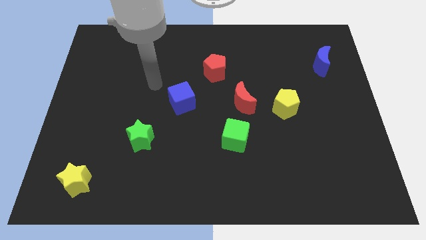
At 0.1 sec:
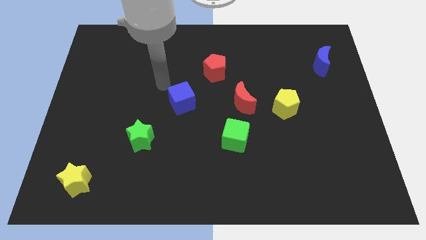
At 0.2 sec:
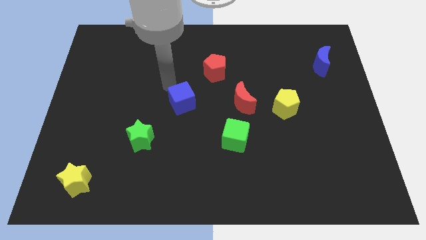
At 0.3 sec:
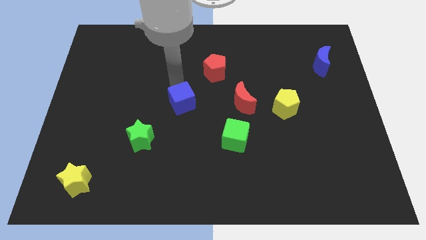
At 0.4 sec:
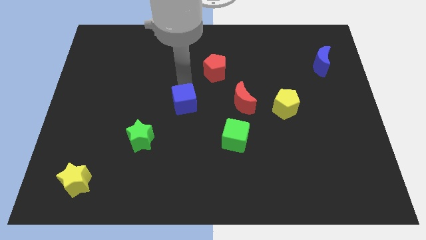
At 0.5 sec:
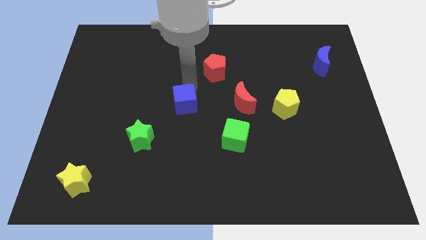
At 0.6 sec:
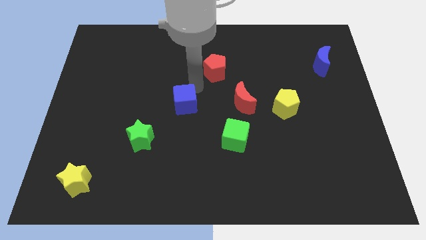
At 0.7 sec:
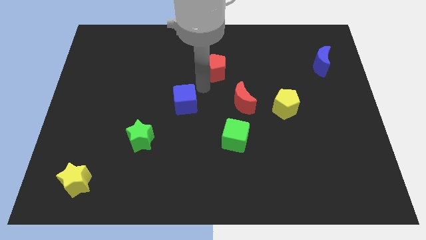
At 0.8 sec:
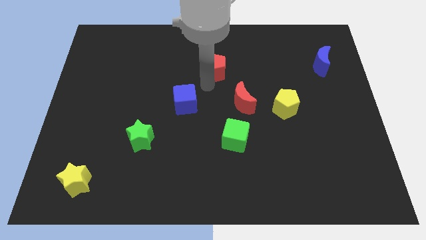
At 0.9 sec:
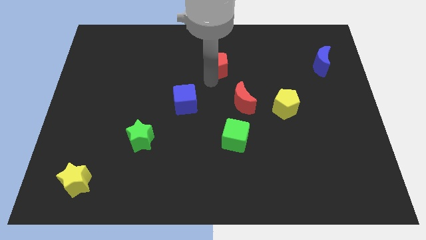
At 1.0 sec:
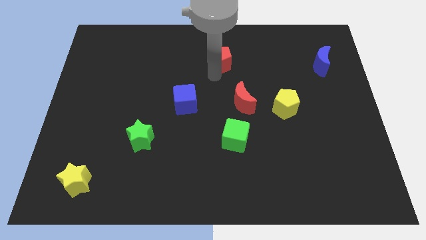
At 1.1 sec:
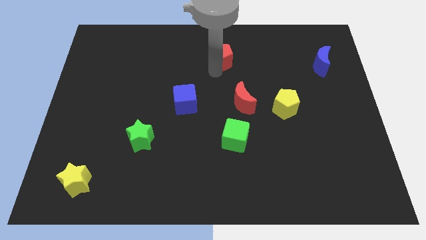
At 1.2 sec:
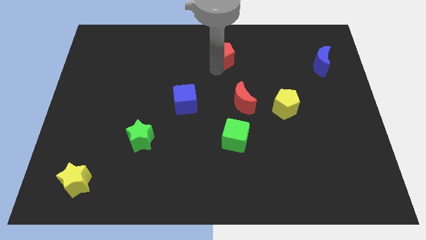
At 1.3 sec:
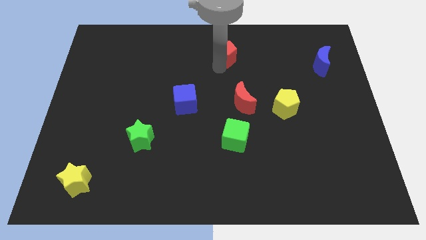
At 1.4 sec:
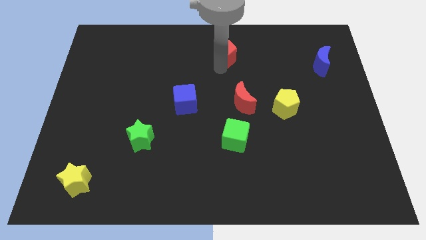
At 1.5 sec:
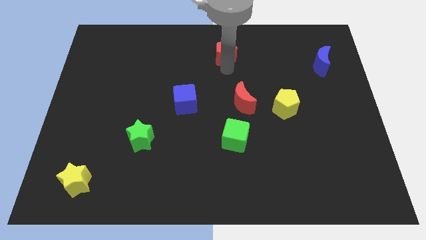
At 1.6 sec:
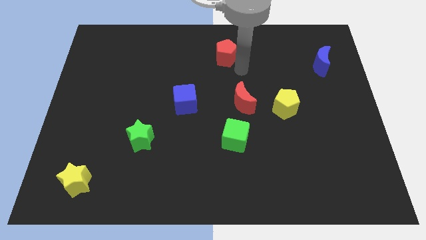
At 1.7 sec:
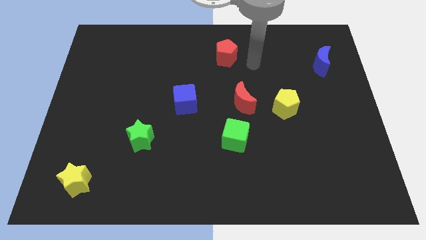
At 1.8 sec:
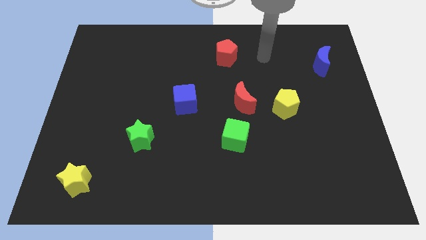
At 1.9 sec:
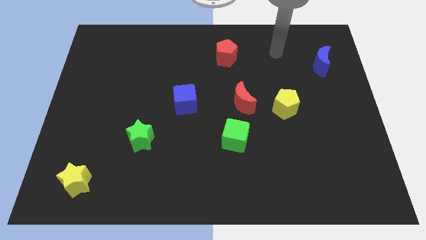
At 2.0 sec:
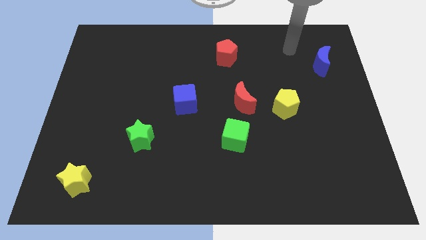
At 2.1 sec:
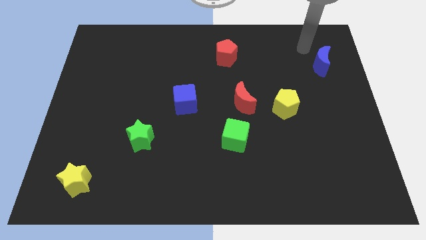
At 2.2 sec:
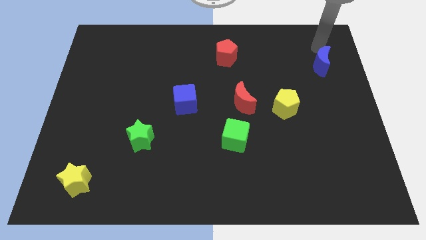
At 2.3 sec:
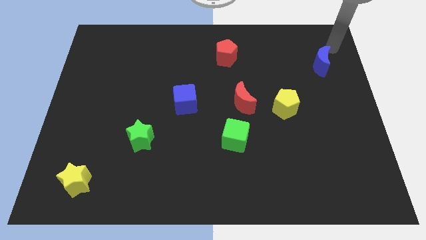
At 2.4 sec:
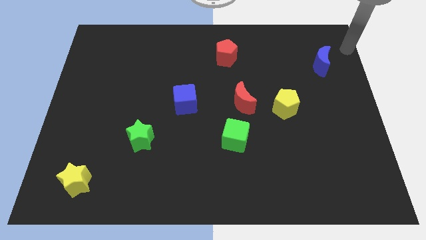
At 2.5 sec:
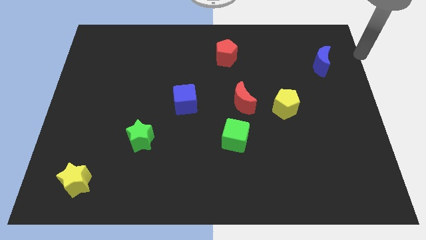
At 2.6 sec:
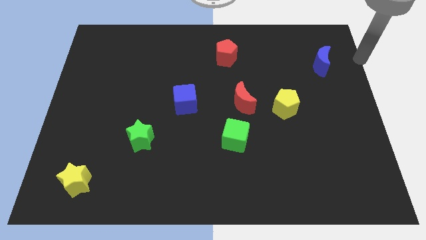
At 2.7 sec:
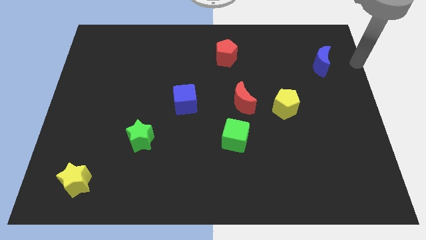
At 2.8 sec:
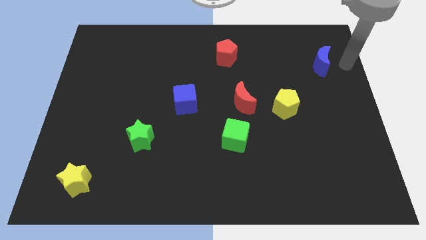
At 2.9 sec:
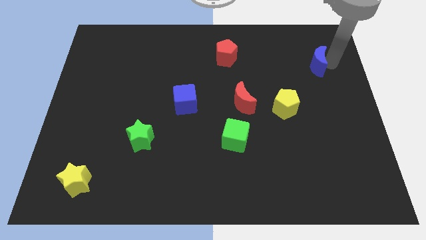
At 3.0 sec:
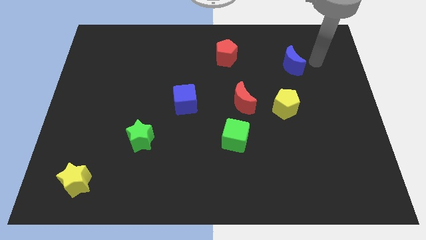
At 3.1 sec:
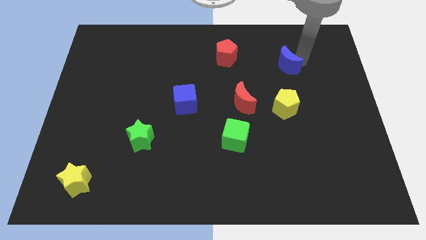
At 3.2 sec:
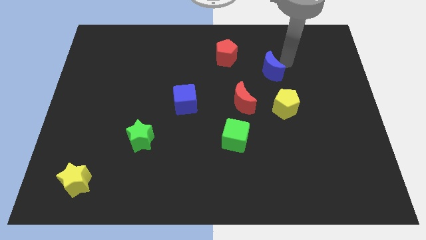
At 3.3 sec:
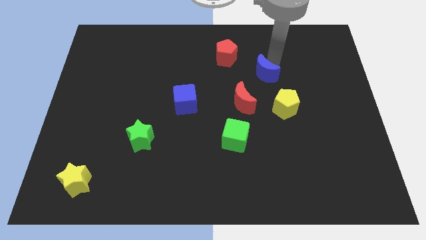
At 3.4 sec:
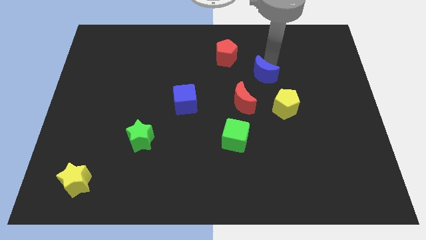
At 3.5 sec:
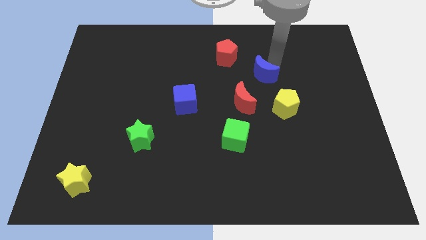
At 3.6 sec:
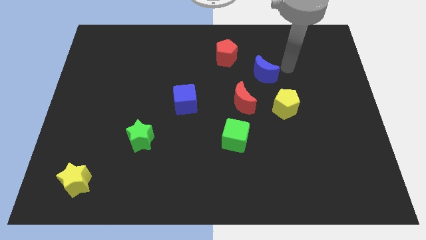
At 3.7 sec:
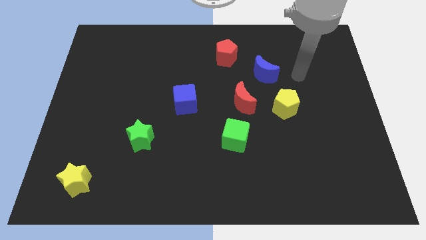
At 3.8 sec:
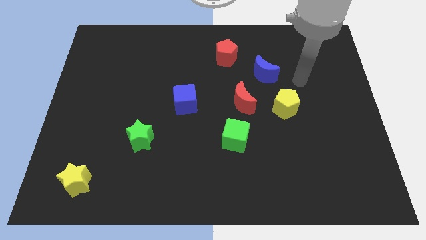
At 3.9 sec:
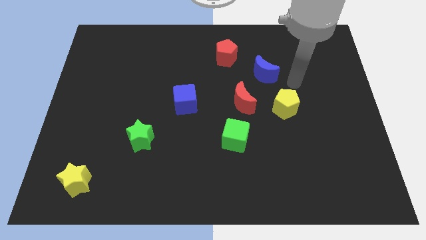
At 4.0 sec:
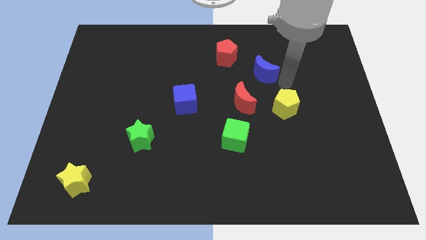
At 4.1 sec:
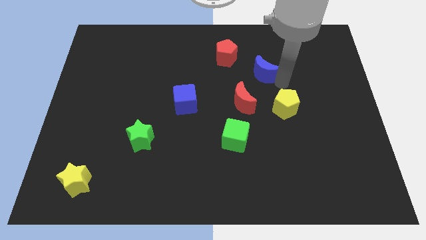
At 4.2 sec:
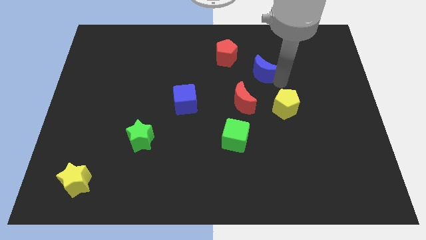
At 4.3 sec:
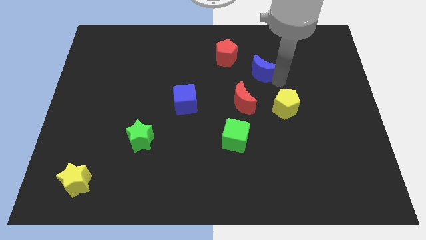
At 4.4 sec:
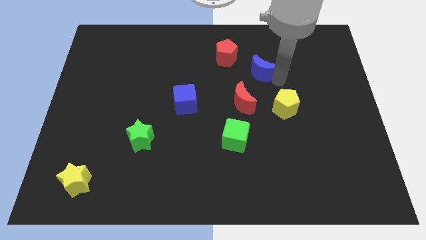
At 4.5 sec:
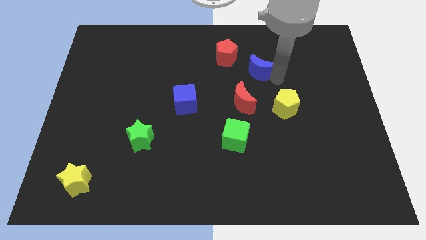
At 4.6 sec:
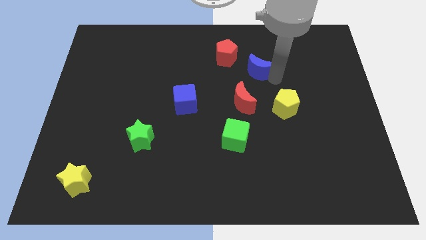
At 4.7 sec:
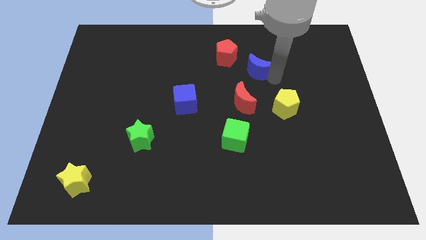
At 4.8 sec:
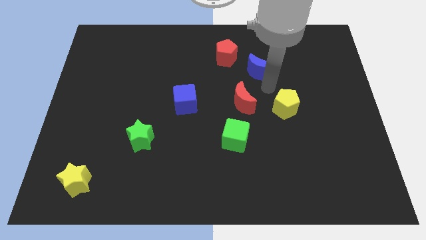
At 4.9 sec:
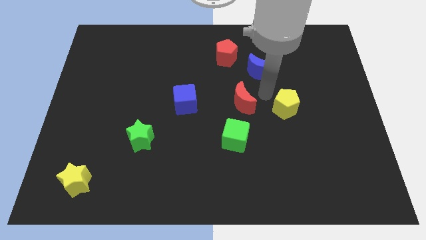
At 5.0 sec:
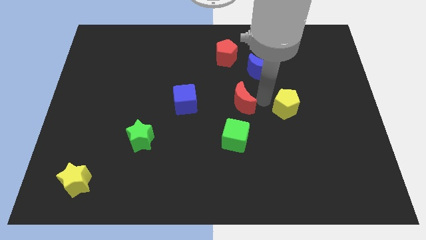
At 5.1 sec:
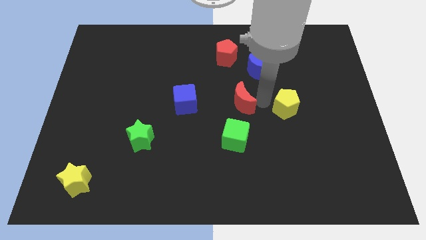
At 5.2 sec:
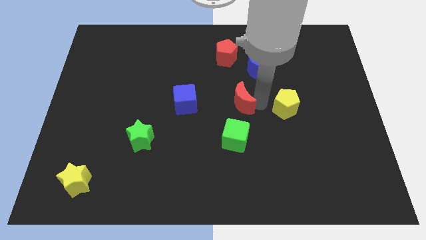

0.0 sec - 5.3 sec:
move the blue crescent to the right side of the red pentagon

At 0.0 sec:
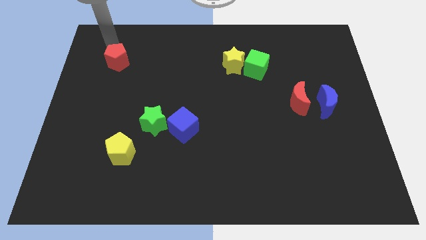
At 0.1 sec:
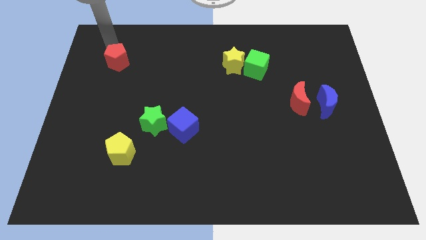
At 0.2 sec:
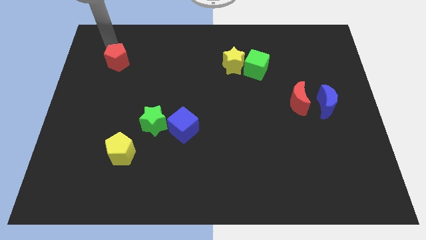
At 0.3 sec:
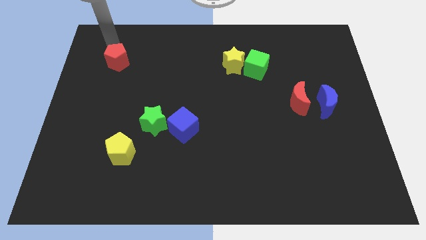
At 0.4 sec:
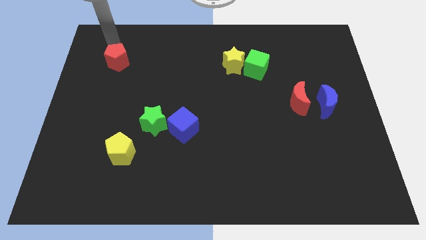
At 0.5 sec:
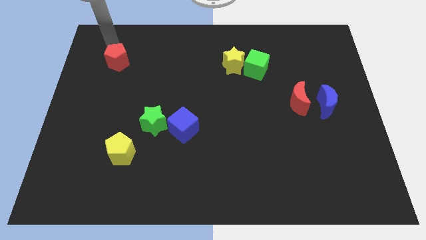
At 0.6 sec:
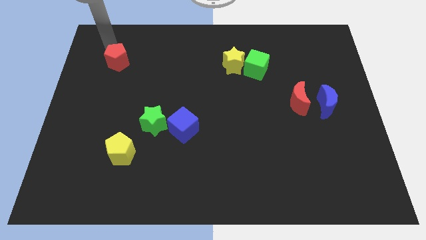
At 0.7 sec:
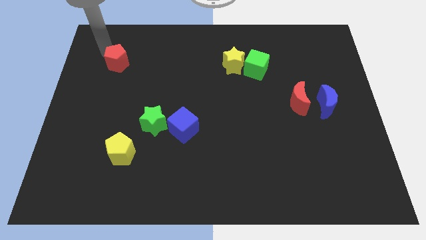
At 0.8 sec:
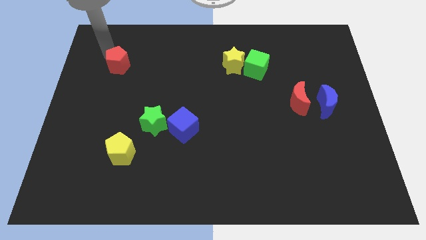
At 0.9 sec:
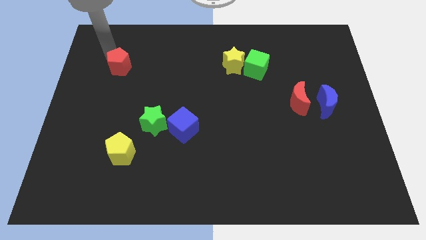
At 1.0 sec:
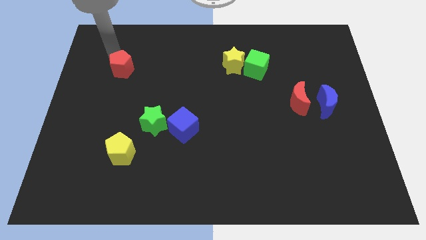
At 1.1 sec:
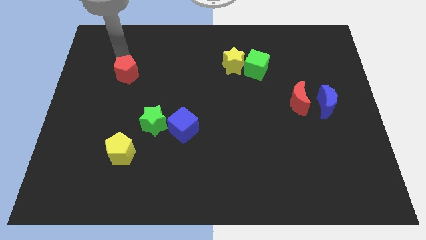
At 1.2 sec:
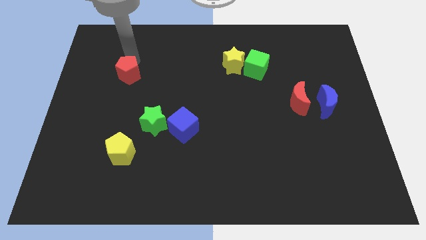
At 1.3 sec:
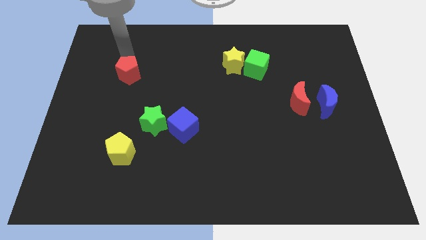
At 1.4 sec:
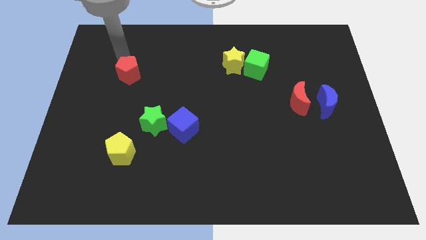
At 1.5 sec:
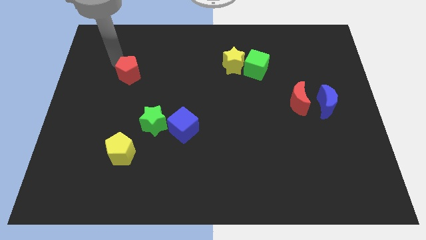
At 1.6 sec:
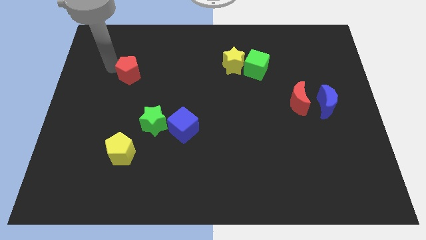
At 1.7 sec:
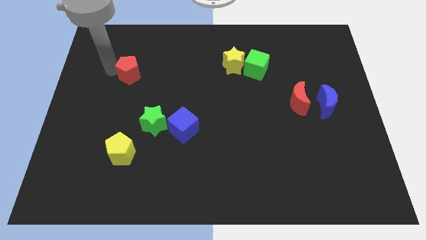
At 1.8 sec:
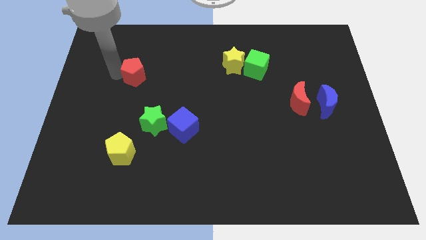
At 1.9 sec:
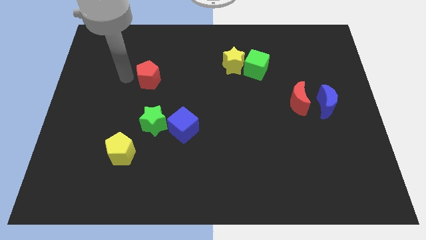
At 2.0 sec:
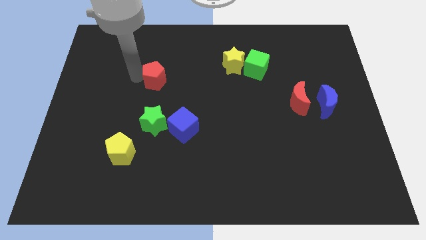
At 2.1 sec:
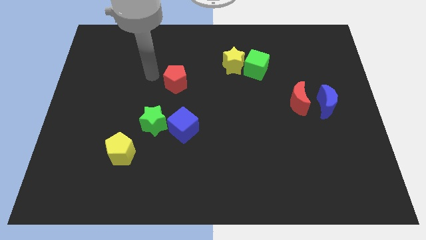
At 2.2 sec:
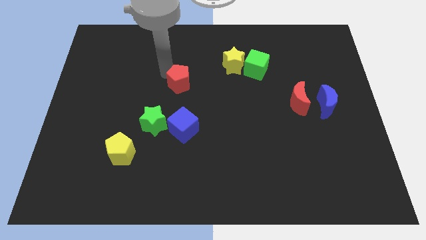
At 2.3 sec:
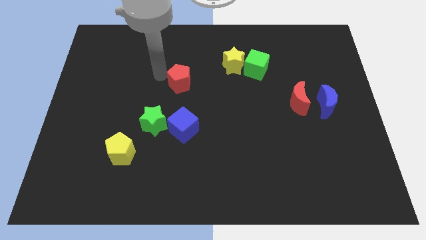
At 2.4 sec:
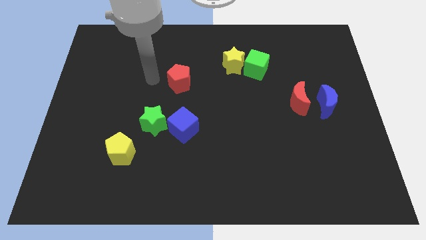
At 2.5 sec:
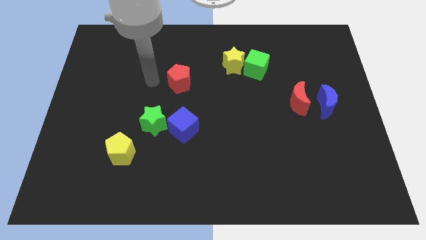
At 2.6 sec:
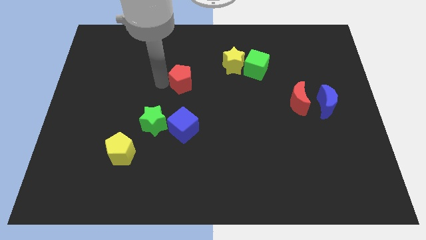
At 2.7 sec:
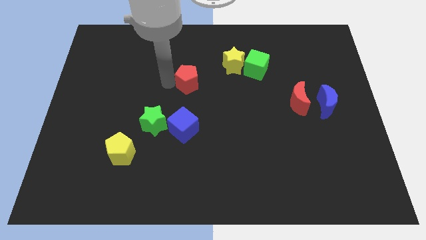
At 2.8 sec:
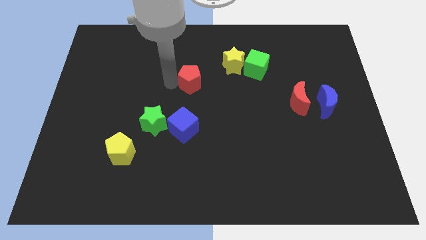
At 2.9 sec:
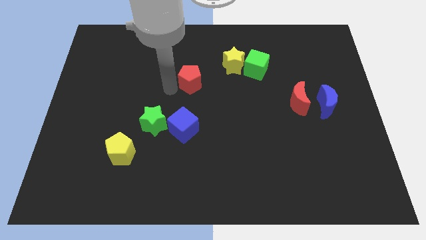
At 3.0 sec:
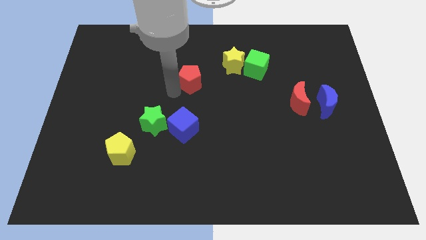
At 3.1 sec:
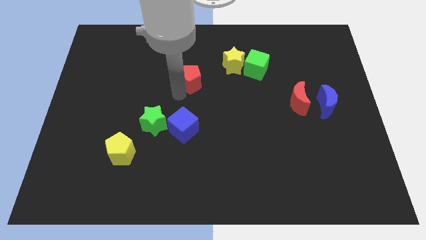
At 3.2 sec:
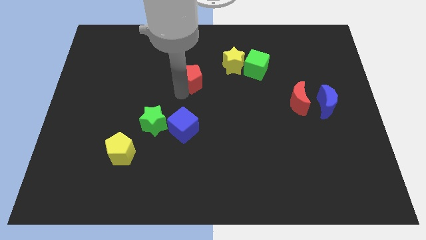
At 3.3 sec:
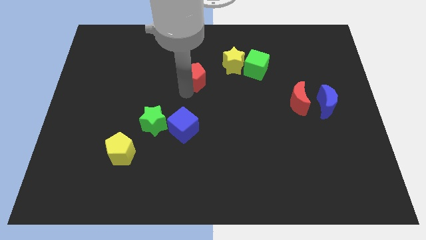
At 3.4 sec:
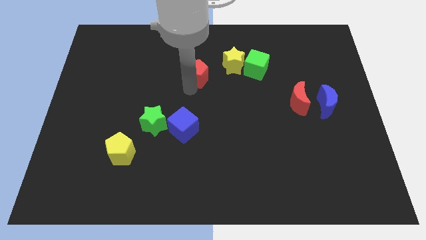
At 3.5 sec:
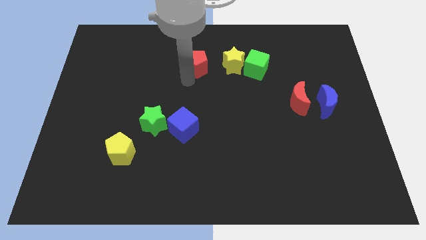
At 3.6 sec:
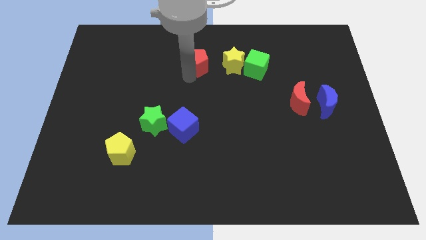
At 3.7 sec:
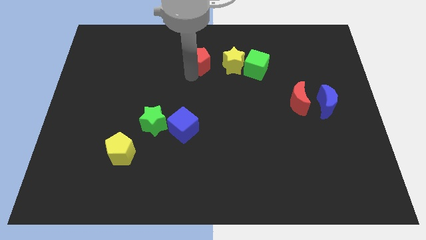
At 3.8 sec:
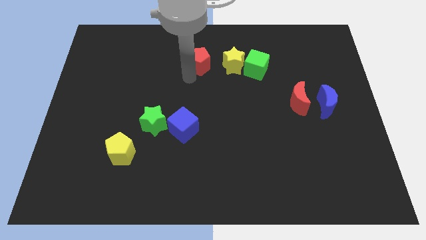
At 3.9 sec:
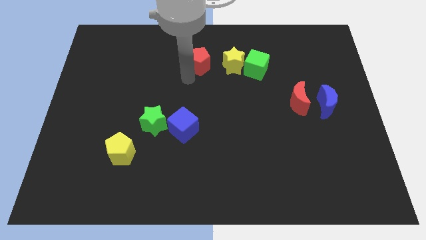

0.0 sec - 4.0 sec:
place red pentagon to the left of the yellow star
